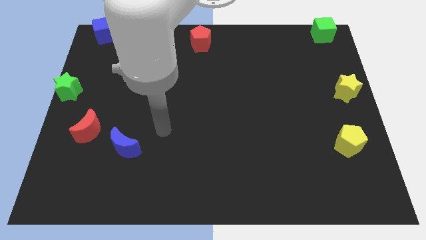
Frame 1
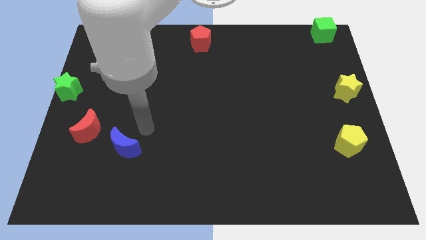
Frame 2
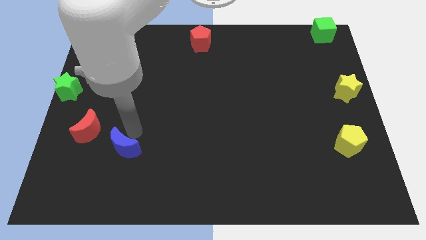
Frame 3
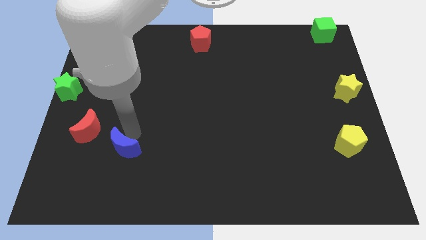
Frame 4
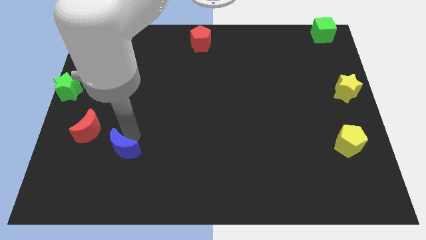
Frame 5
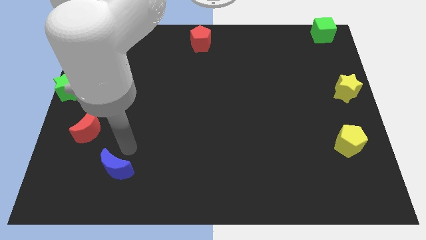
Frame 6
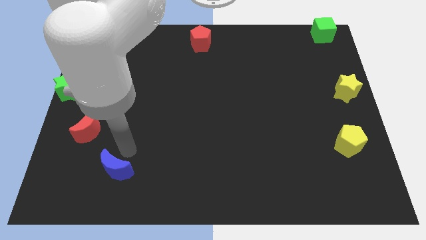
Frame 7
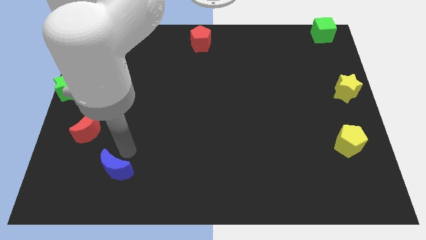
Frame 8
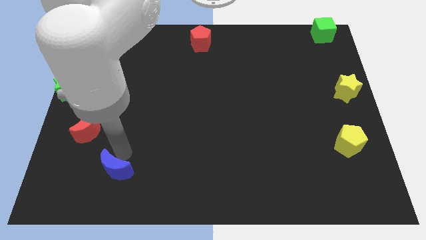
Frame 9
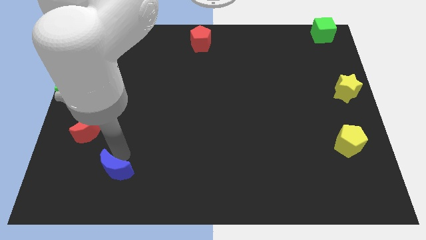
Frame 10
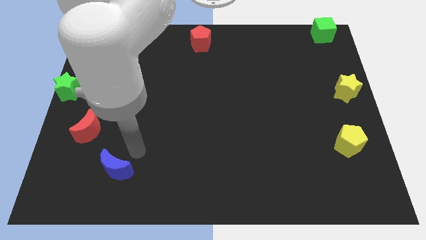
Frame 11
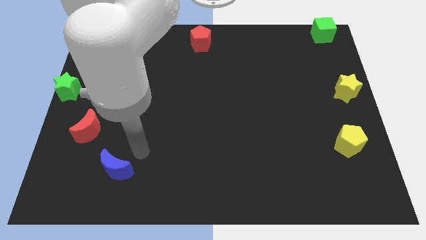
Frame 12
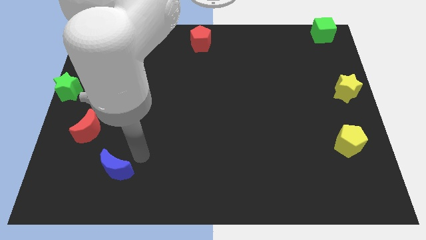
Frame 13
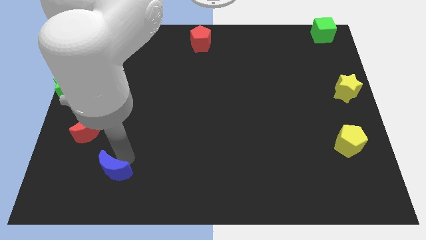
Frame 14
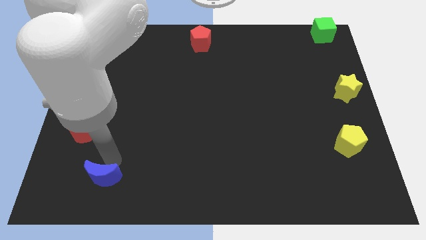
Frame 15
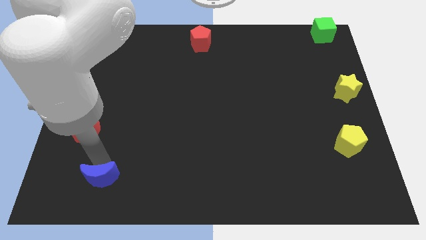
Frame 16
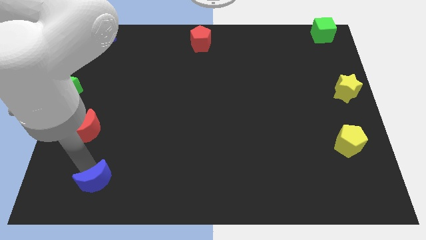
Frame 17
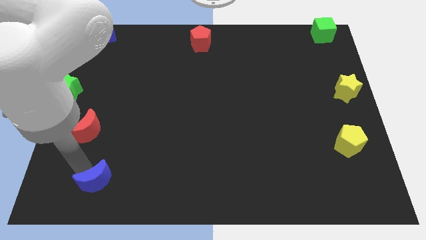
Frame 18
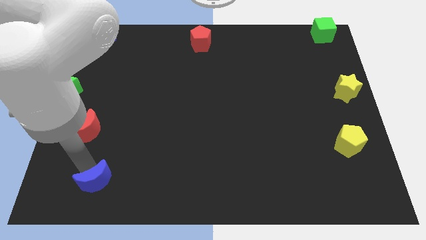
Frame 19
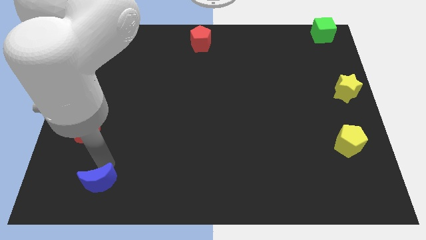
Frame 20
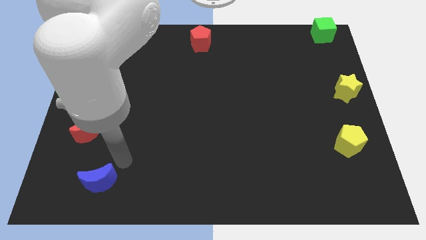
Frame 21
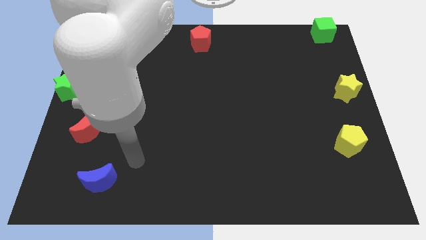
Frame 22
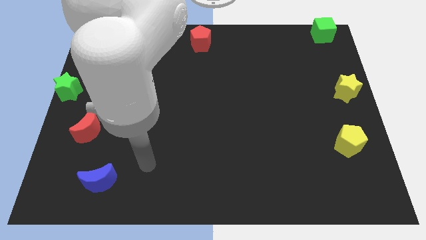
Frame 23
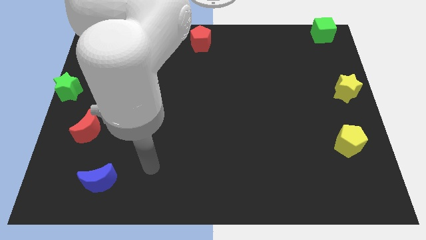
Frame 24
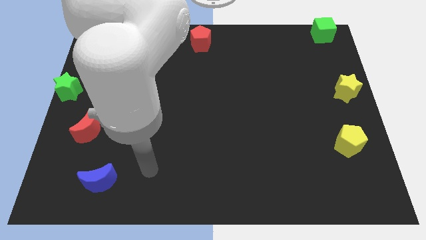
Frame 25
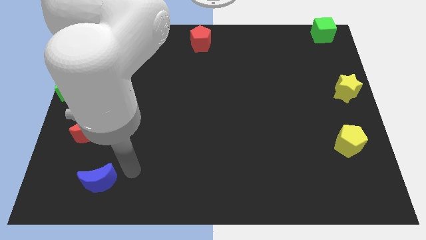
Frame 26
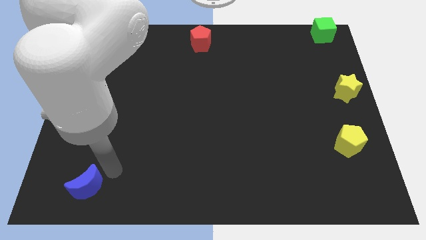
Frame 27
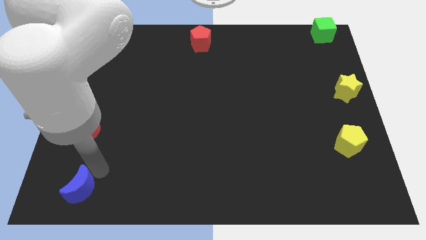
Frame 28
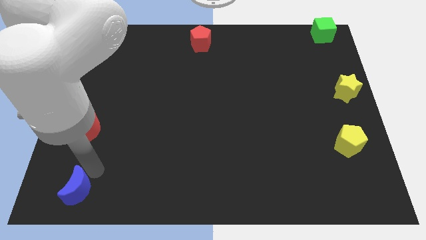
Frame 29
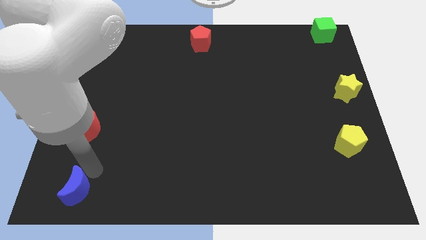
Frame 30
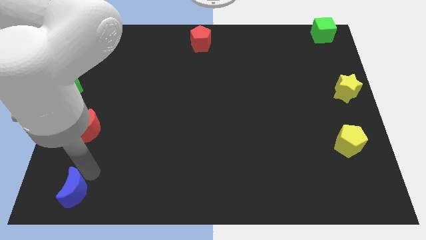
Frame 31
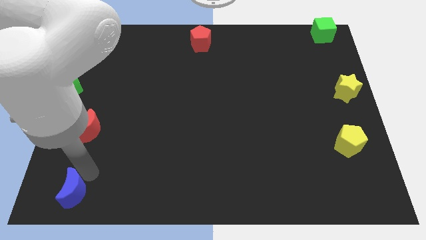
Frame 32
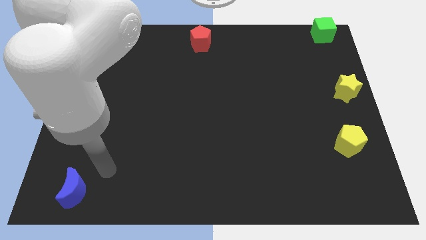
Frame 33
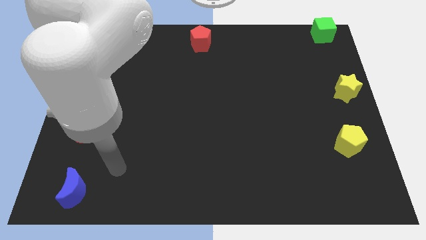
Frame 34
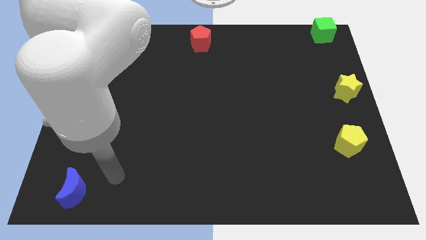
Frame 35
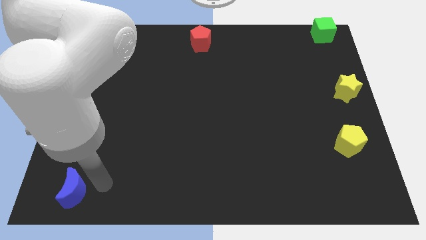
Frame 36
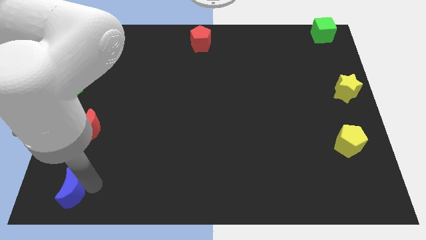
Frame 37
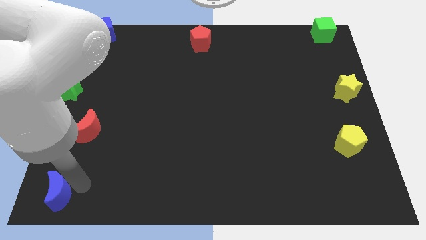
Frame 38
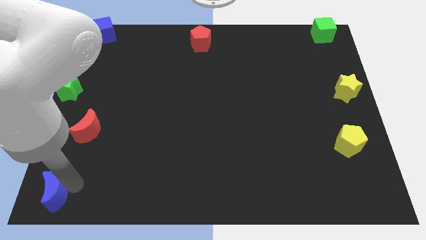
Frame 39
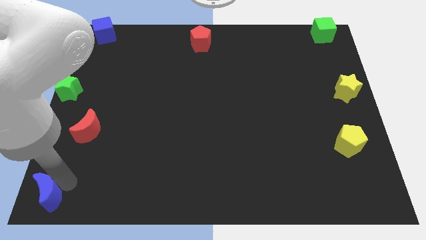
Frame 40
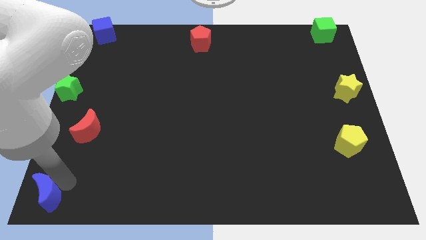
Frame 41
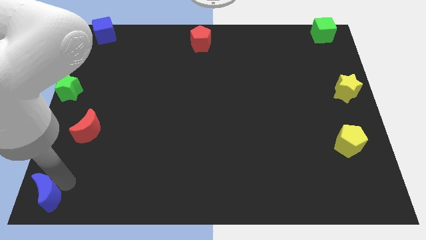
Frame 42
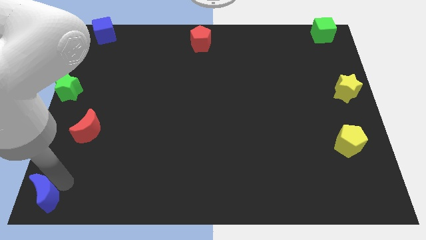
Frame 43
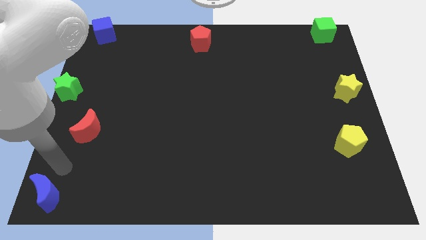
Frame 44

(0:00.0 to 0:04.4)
push the blue moon to the bottom left of the board

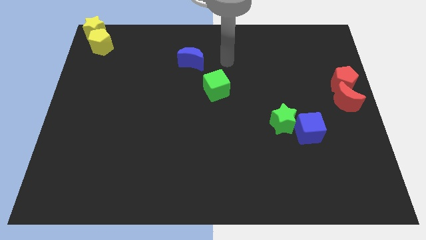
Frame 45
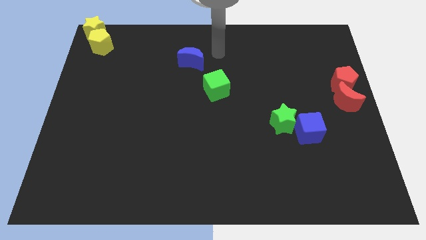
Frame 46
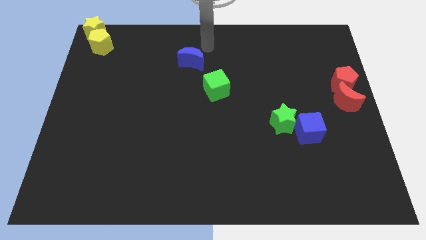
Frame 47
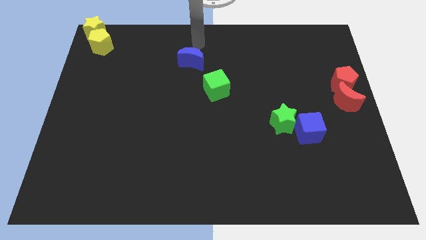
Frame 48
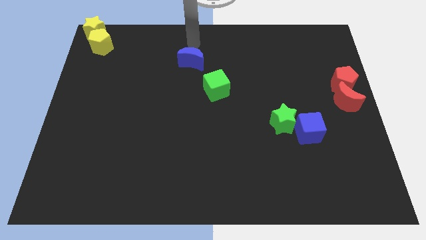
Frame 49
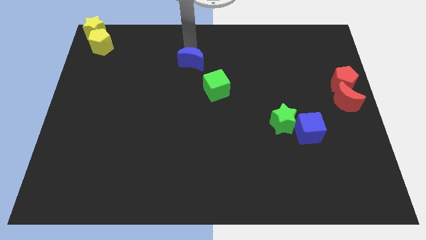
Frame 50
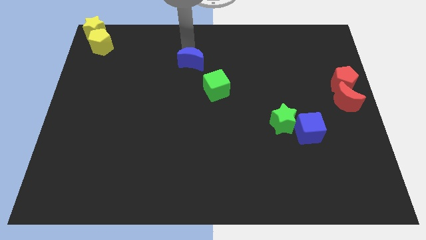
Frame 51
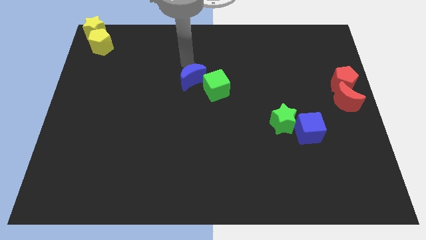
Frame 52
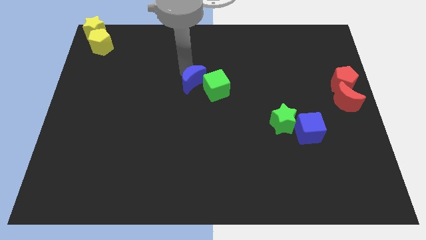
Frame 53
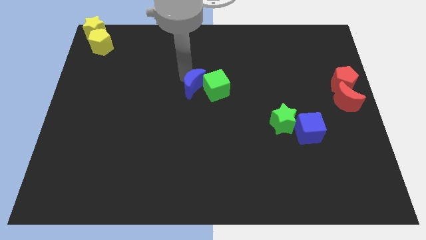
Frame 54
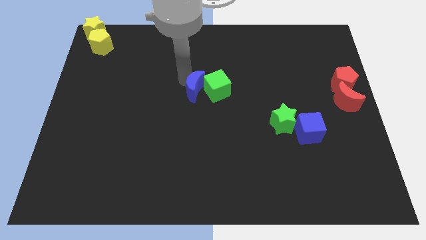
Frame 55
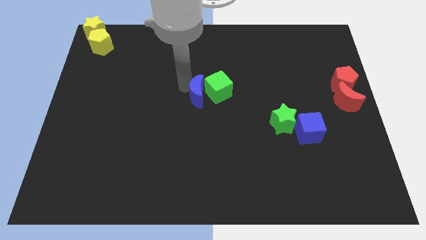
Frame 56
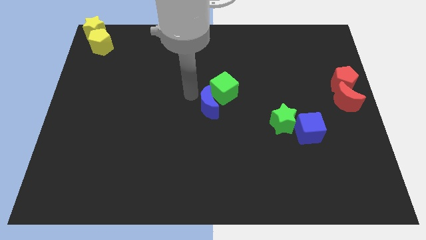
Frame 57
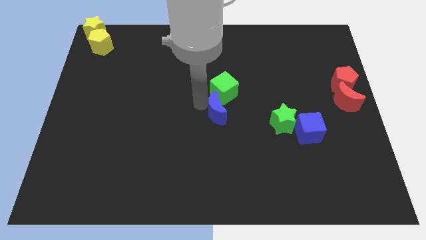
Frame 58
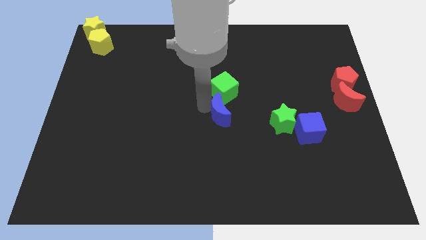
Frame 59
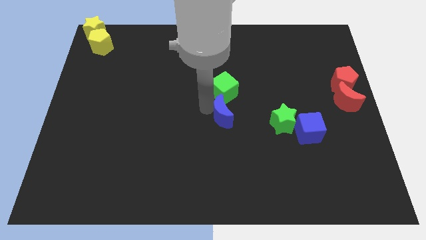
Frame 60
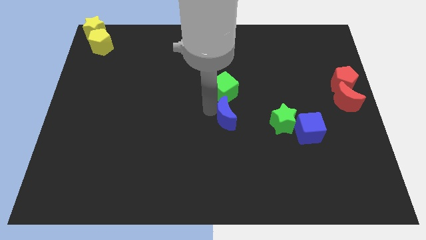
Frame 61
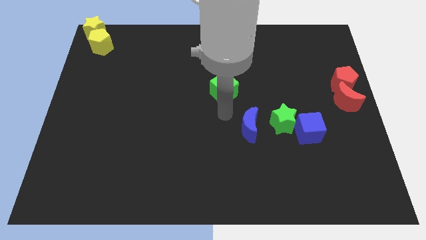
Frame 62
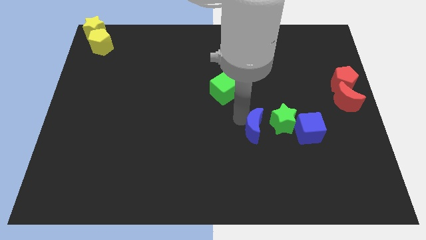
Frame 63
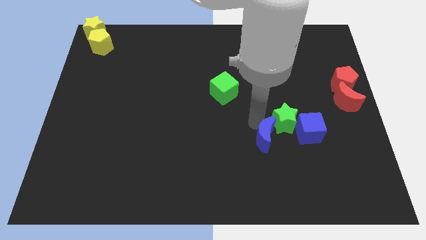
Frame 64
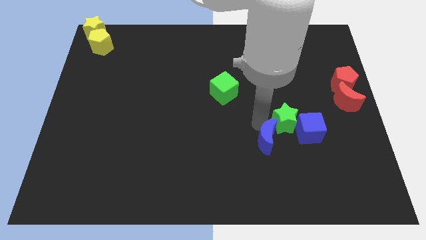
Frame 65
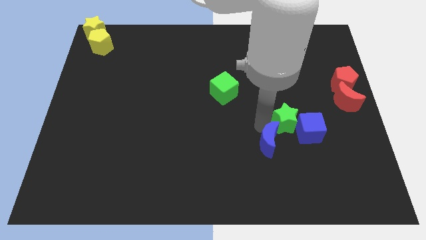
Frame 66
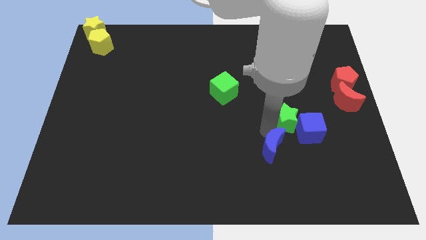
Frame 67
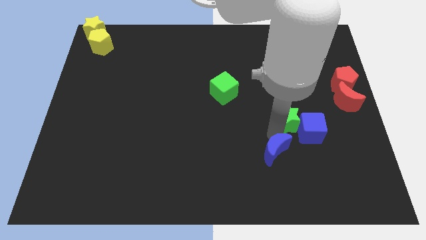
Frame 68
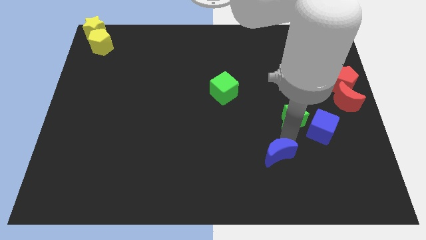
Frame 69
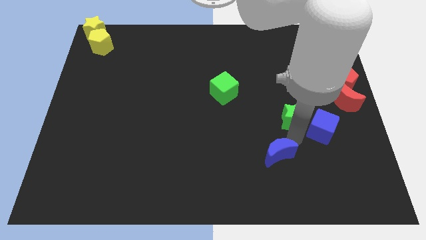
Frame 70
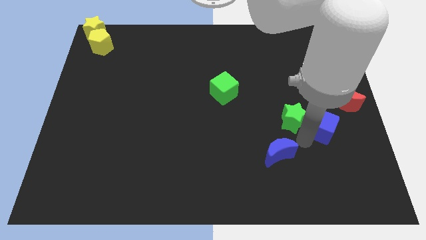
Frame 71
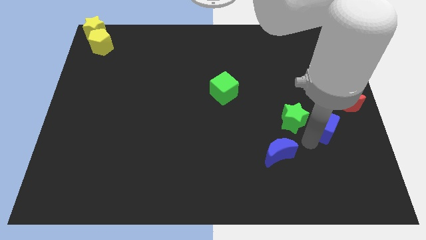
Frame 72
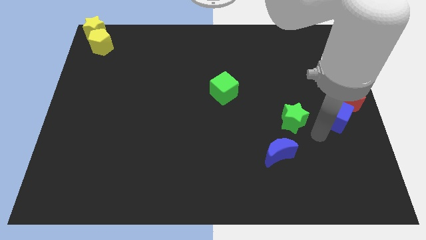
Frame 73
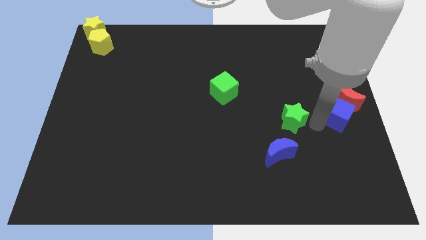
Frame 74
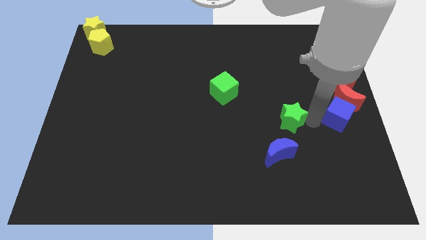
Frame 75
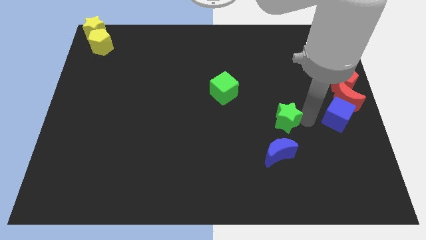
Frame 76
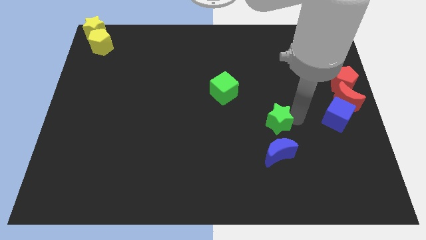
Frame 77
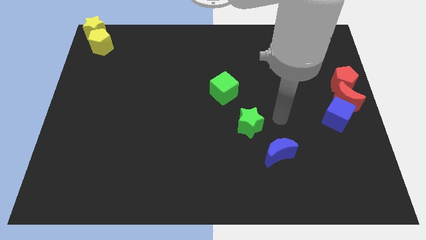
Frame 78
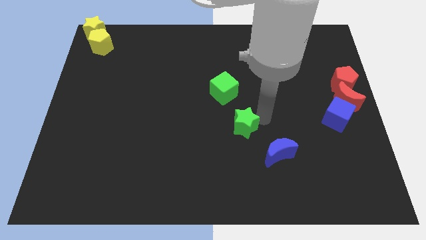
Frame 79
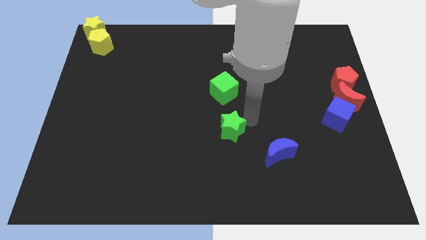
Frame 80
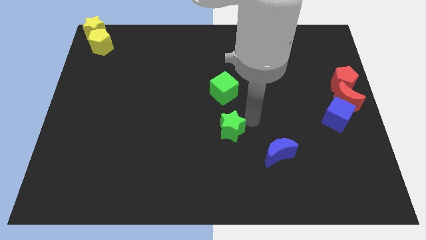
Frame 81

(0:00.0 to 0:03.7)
move away the green star from blue cube

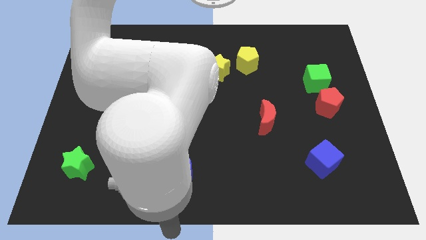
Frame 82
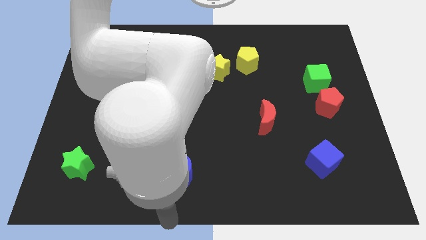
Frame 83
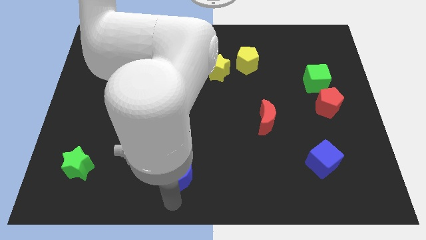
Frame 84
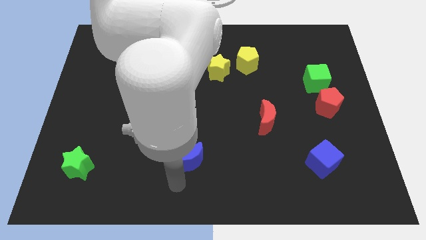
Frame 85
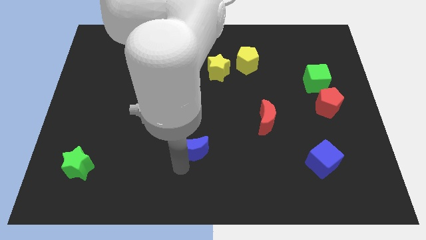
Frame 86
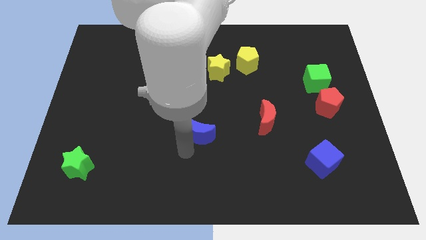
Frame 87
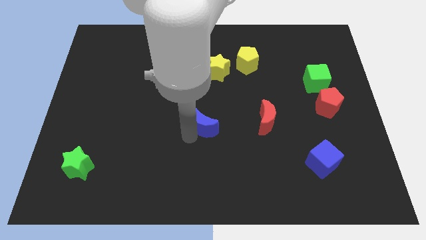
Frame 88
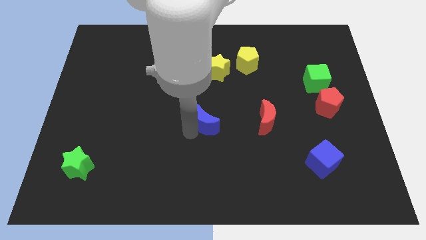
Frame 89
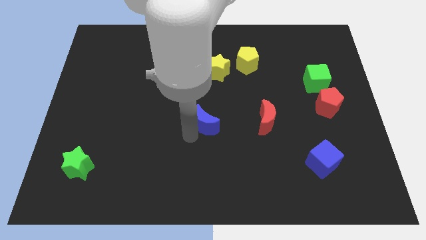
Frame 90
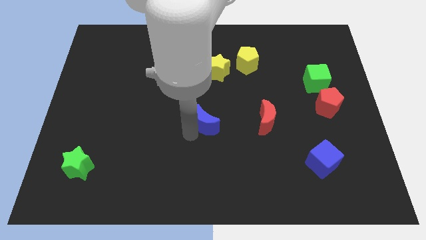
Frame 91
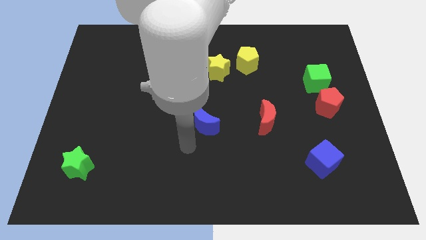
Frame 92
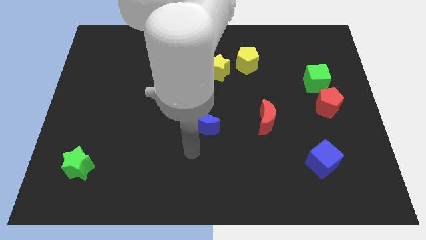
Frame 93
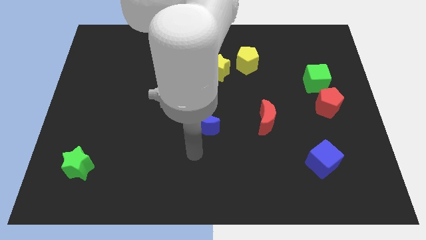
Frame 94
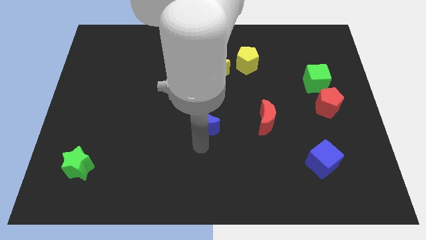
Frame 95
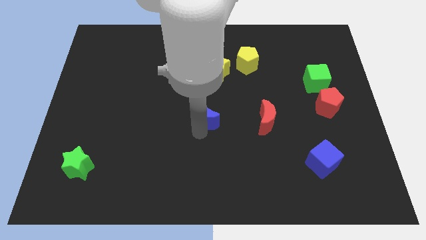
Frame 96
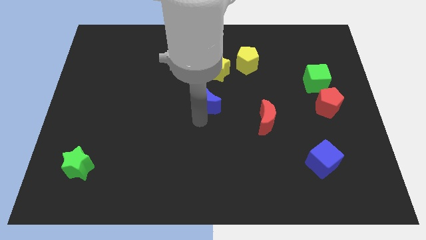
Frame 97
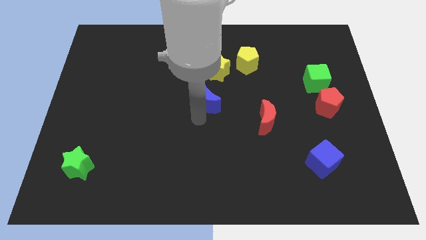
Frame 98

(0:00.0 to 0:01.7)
push the blue crescent to the center of the board
